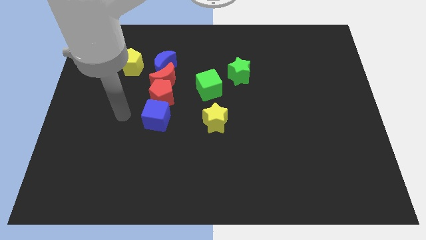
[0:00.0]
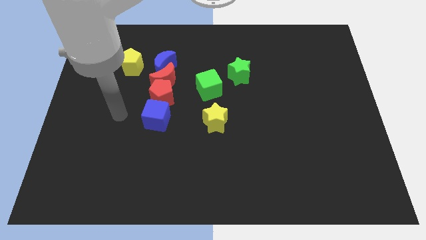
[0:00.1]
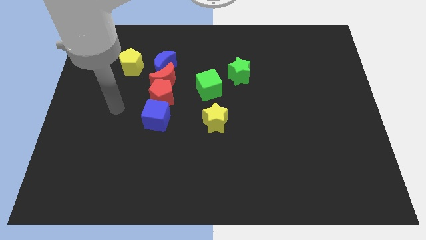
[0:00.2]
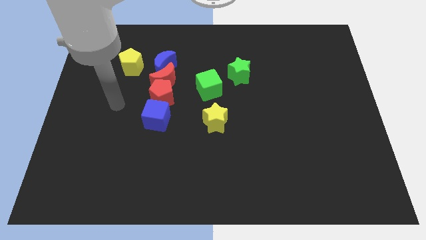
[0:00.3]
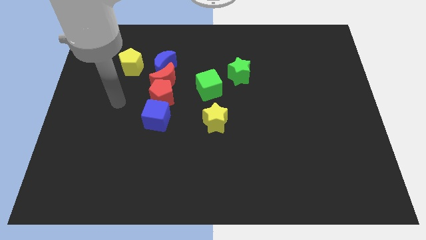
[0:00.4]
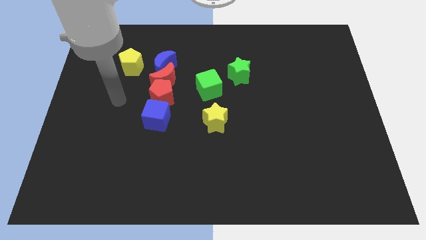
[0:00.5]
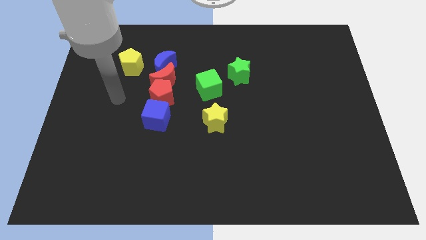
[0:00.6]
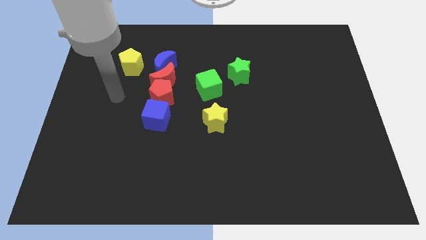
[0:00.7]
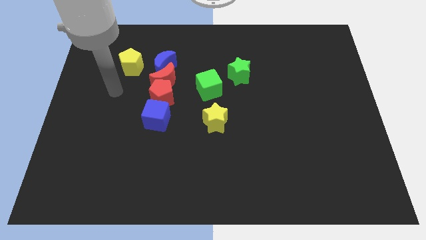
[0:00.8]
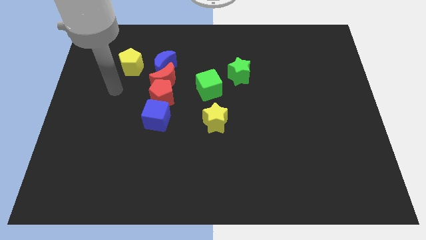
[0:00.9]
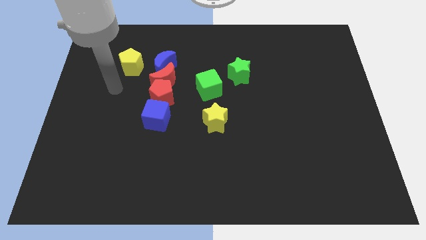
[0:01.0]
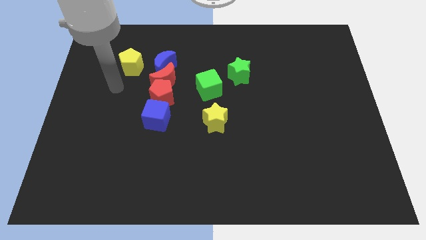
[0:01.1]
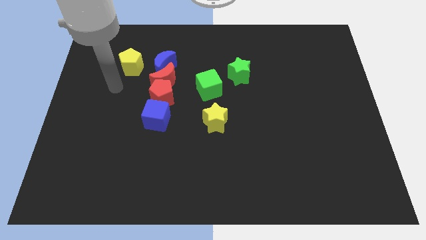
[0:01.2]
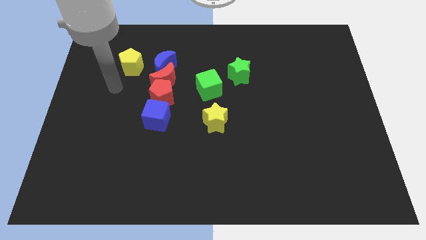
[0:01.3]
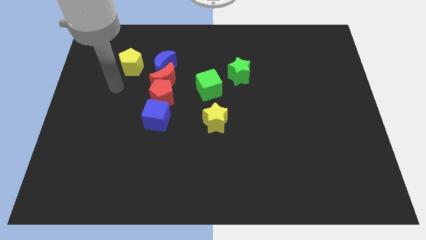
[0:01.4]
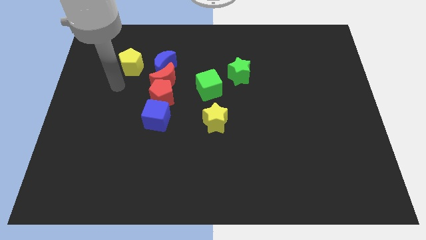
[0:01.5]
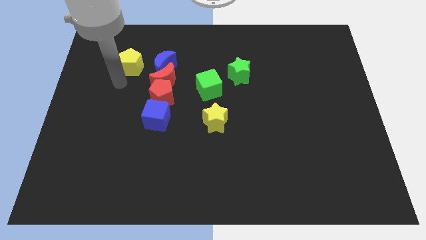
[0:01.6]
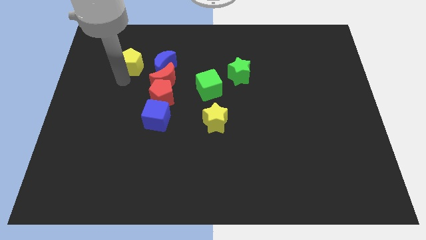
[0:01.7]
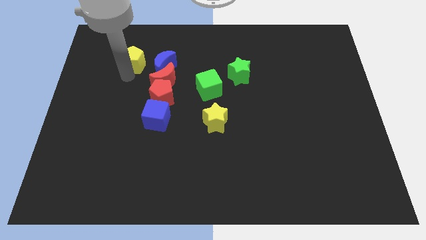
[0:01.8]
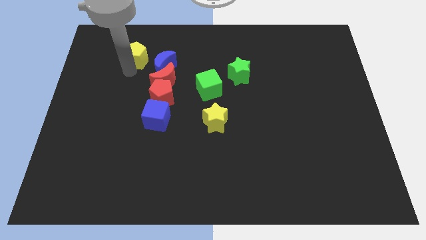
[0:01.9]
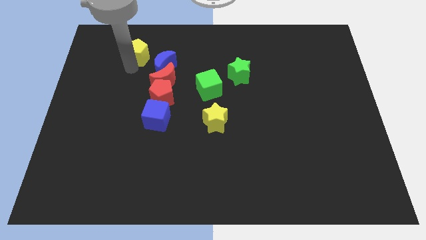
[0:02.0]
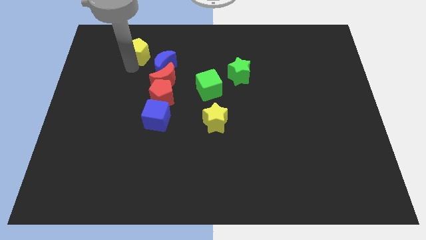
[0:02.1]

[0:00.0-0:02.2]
place the arm at the bottom of yellow pentagon

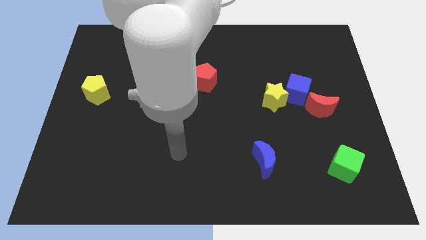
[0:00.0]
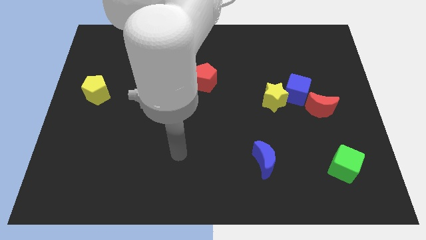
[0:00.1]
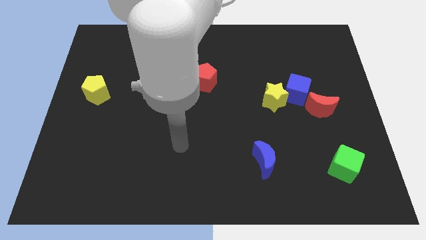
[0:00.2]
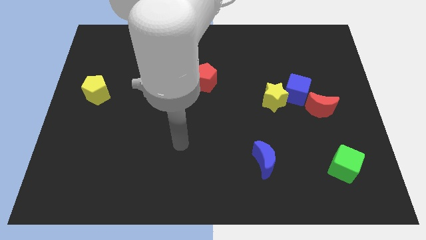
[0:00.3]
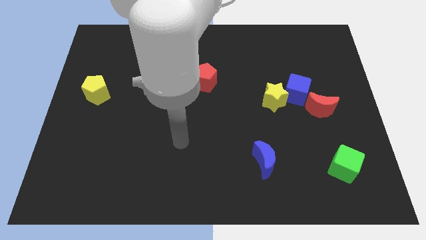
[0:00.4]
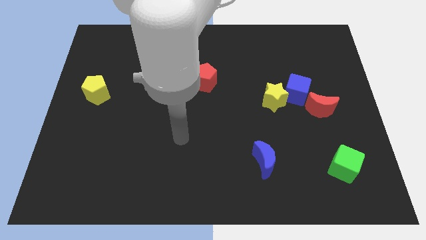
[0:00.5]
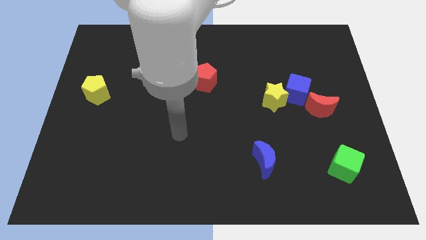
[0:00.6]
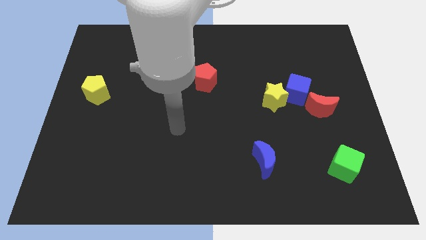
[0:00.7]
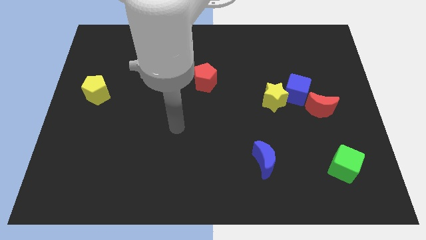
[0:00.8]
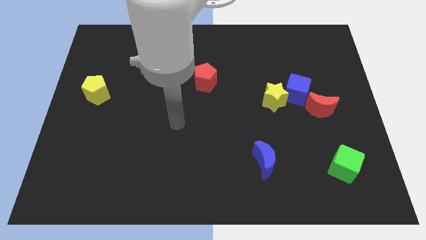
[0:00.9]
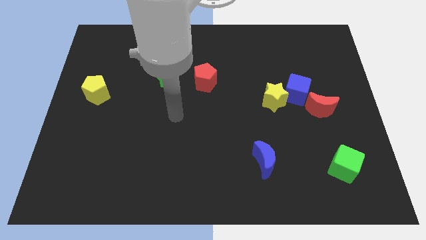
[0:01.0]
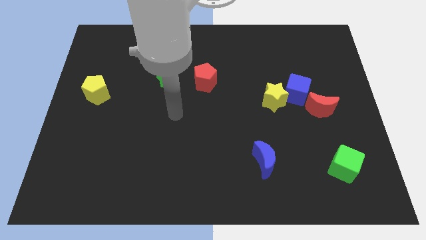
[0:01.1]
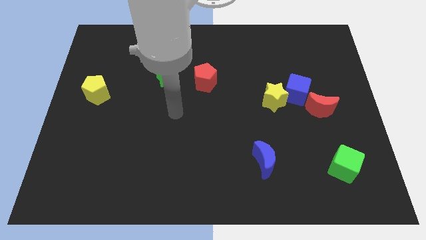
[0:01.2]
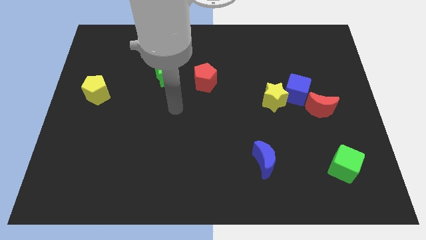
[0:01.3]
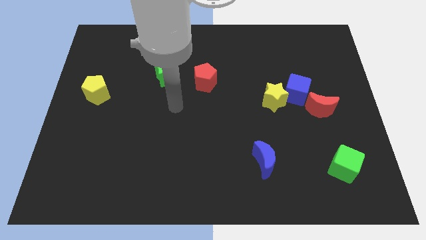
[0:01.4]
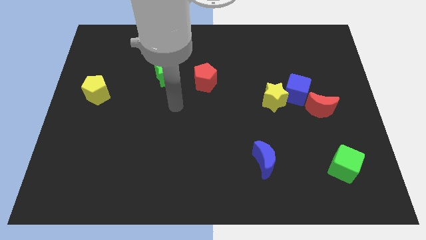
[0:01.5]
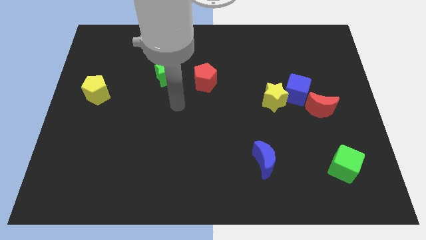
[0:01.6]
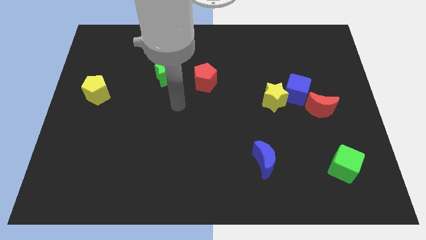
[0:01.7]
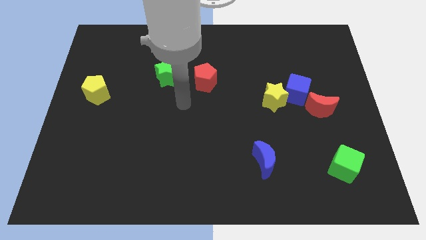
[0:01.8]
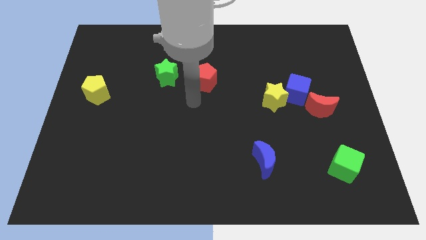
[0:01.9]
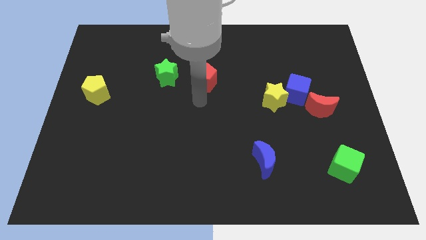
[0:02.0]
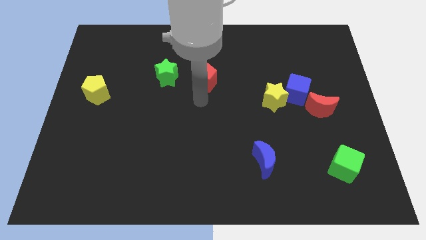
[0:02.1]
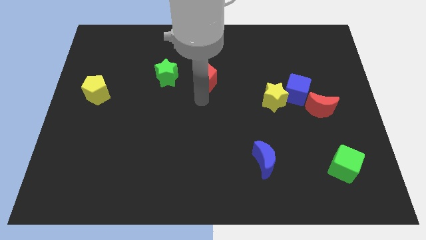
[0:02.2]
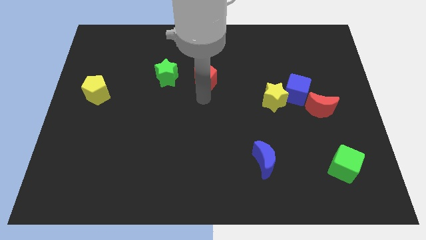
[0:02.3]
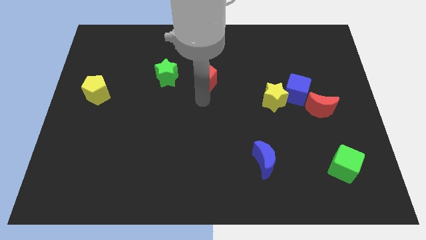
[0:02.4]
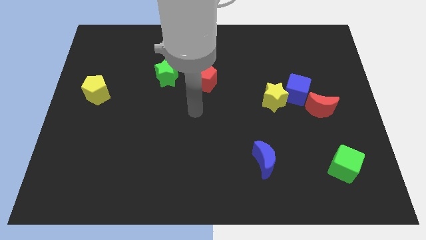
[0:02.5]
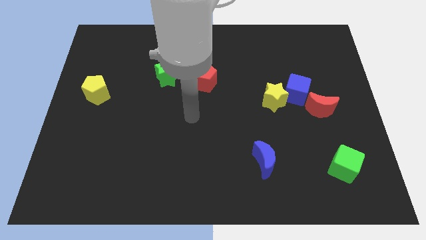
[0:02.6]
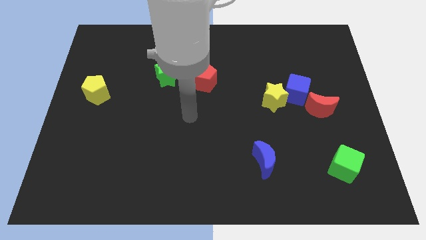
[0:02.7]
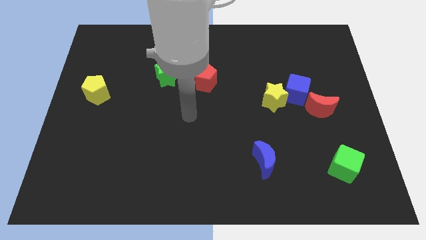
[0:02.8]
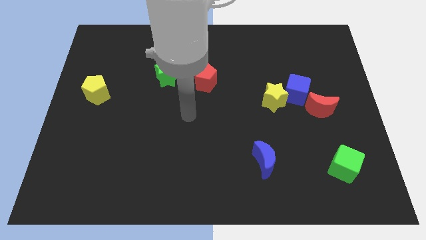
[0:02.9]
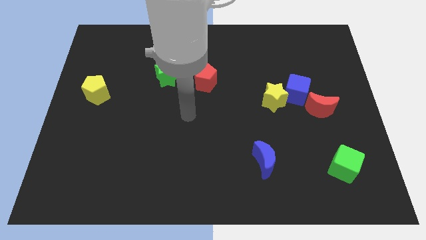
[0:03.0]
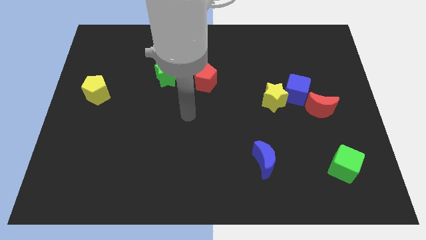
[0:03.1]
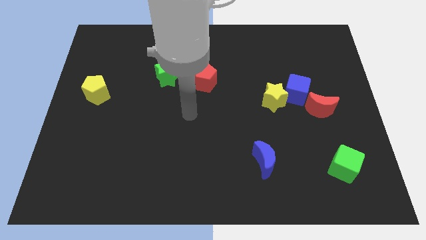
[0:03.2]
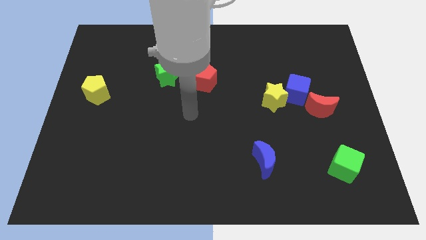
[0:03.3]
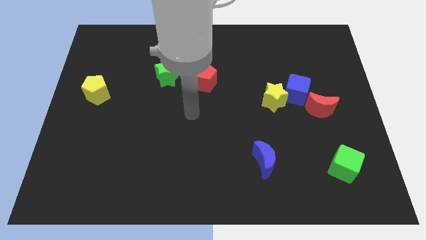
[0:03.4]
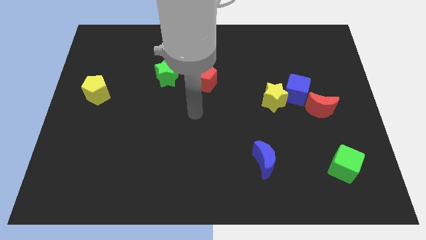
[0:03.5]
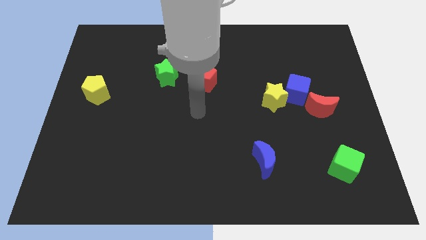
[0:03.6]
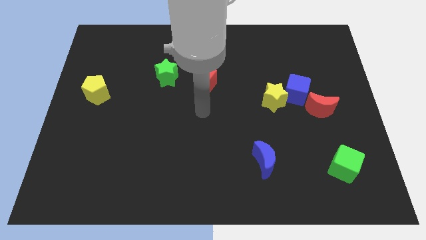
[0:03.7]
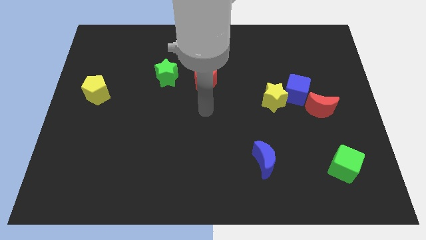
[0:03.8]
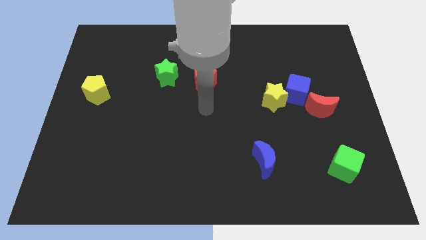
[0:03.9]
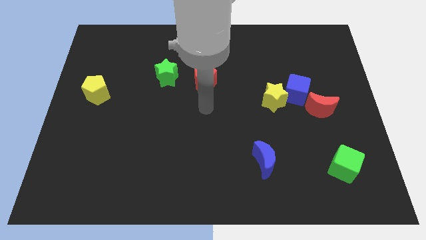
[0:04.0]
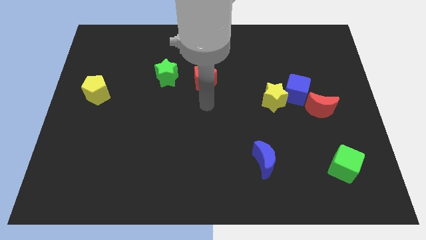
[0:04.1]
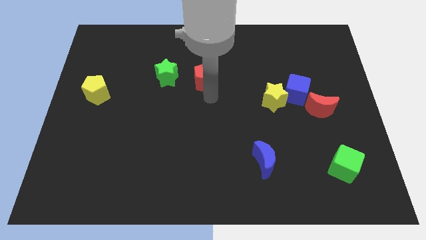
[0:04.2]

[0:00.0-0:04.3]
point your arm at the bottom of red pentagon

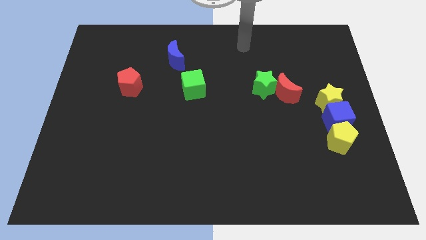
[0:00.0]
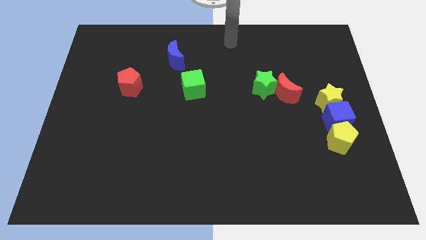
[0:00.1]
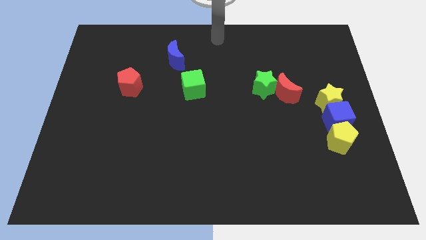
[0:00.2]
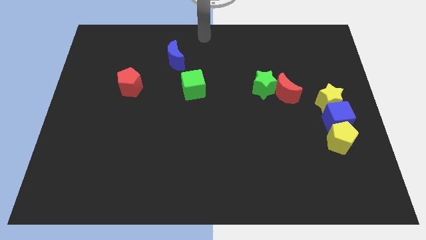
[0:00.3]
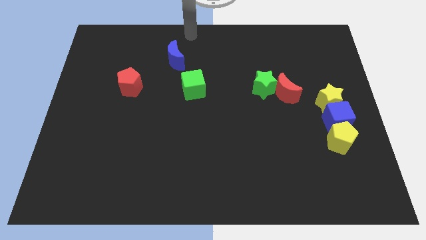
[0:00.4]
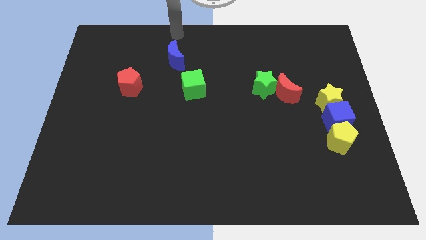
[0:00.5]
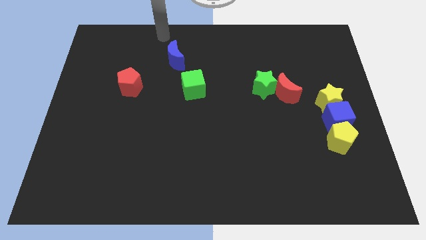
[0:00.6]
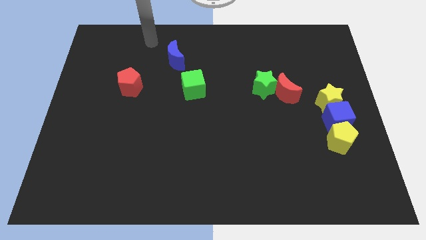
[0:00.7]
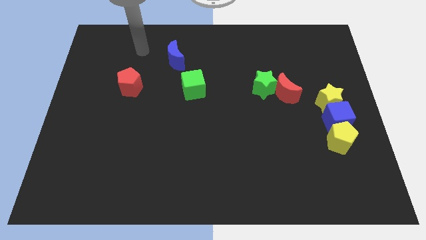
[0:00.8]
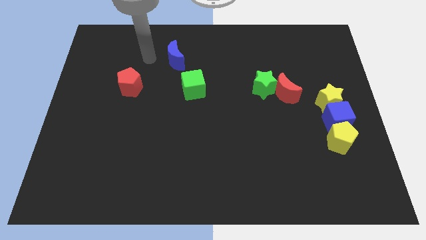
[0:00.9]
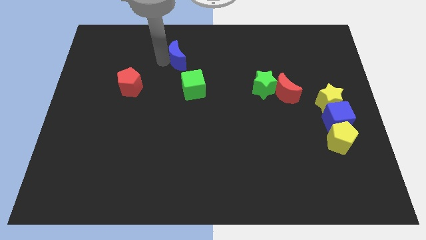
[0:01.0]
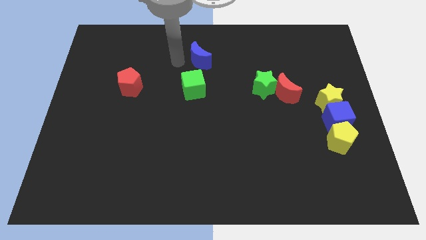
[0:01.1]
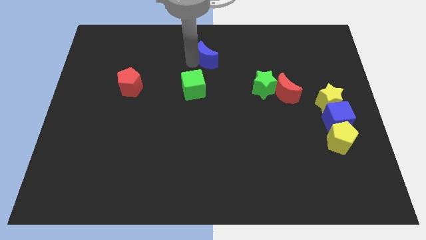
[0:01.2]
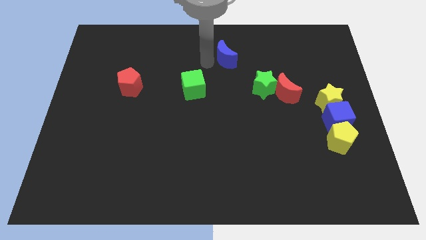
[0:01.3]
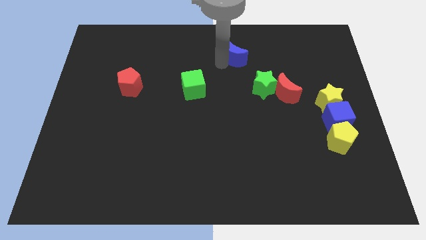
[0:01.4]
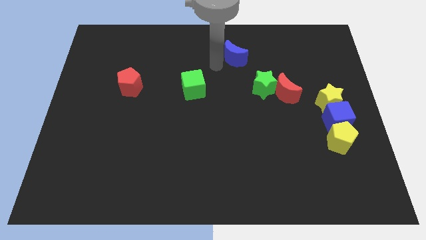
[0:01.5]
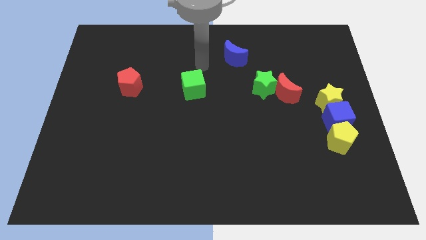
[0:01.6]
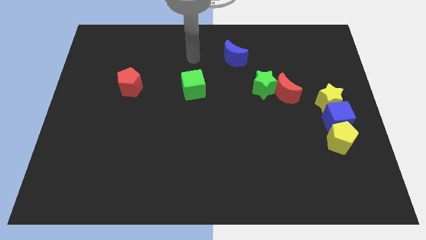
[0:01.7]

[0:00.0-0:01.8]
push the blue moon towards right side

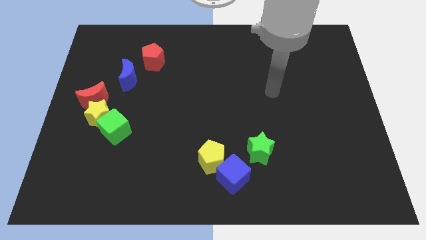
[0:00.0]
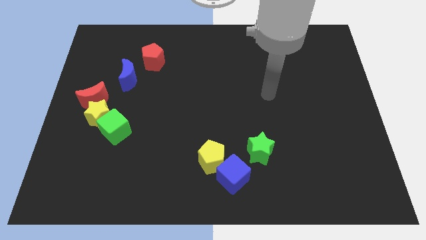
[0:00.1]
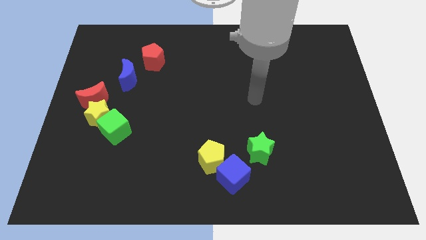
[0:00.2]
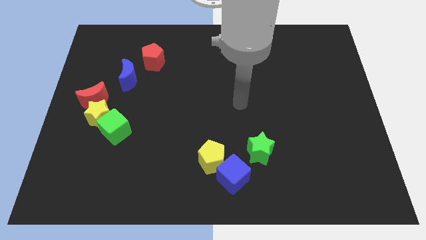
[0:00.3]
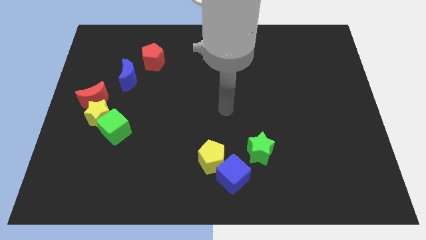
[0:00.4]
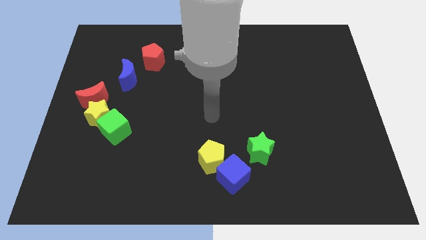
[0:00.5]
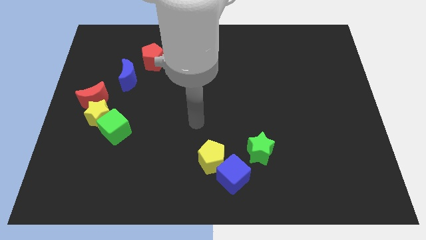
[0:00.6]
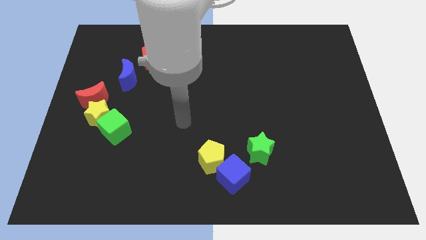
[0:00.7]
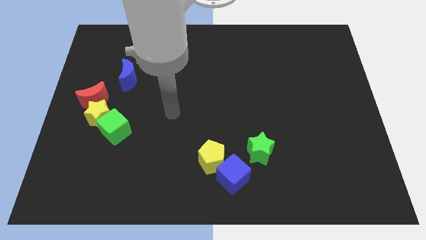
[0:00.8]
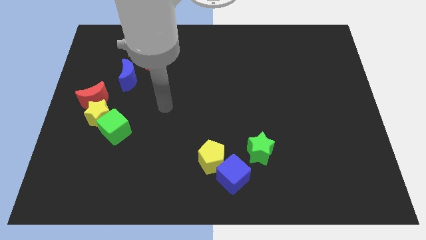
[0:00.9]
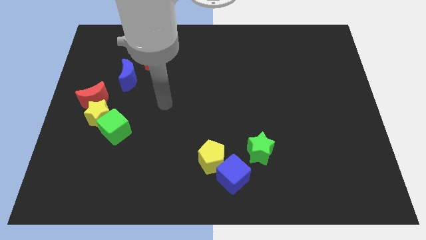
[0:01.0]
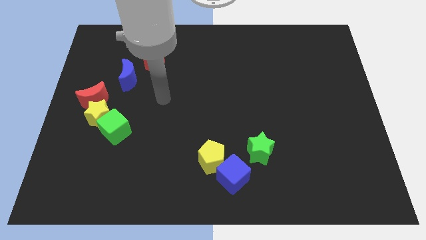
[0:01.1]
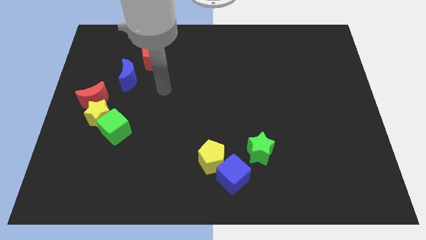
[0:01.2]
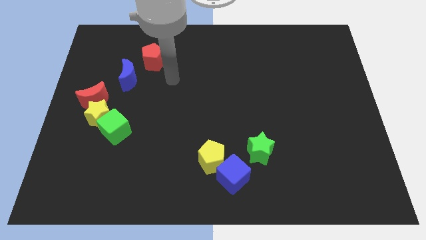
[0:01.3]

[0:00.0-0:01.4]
place the red pentagon at the bottom right side of the red pentagon
